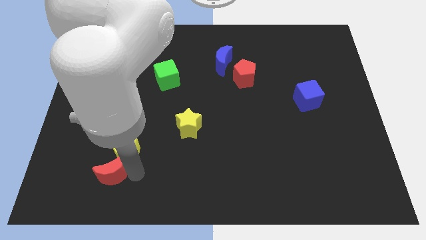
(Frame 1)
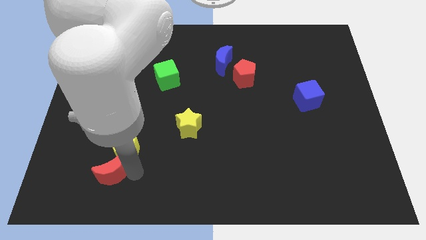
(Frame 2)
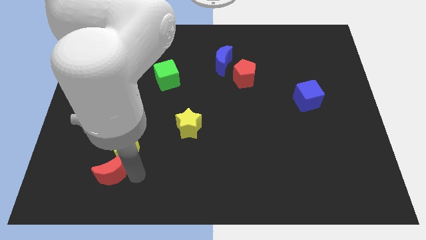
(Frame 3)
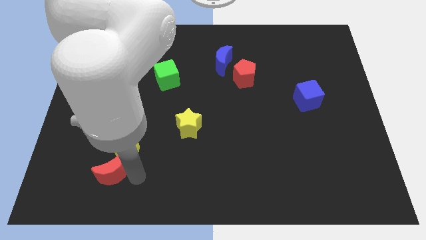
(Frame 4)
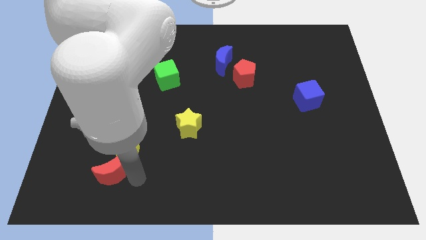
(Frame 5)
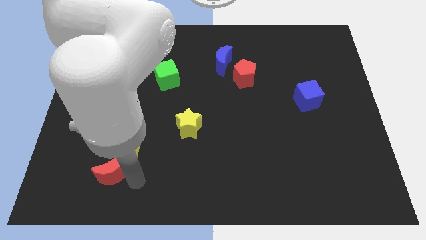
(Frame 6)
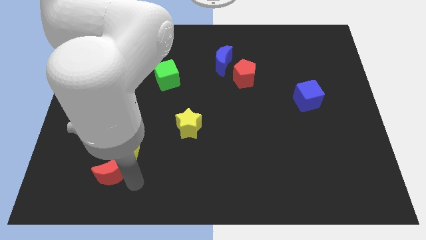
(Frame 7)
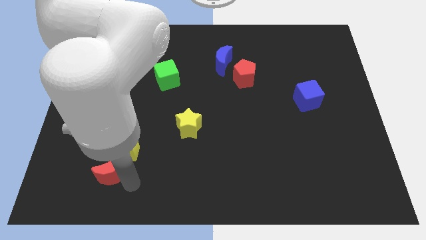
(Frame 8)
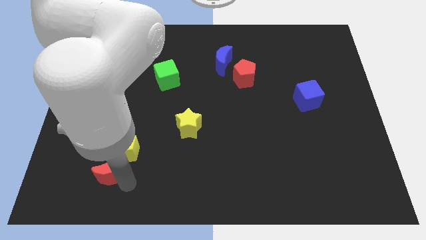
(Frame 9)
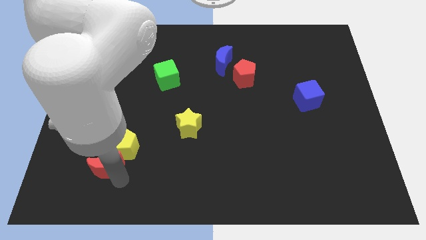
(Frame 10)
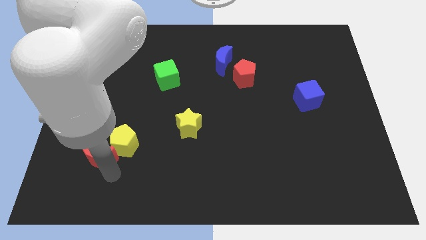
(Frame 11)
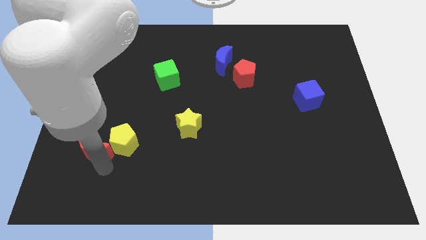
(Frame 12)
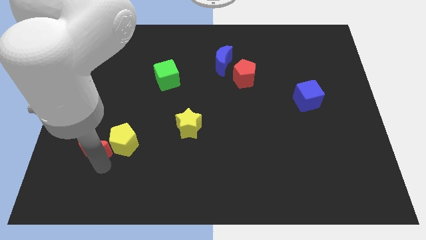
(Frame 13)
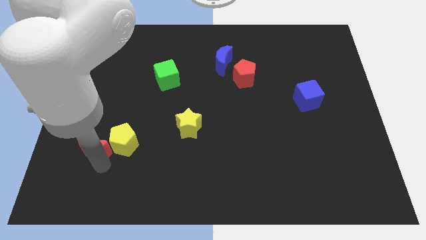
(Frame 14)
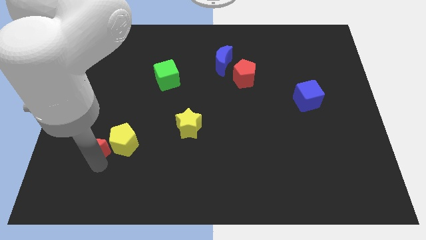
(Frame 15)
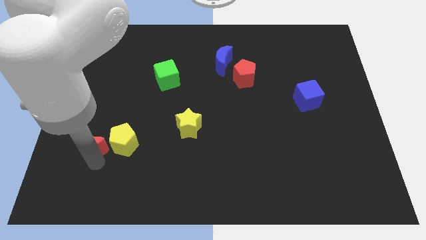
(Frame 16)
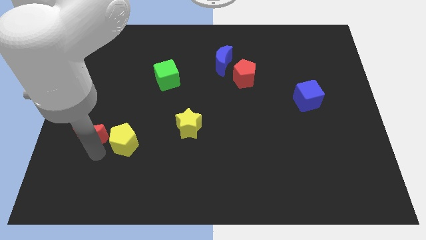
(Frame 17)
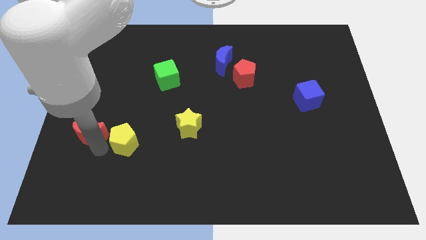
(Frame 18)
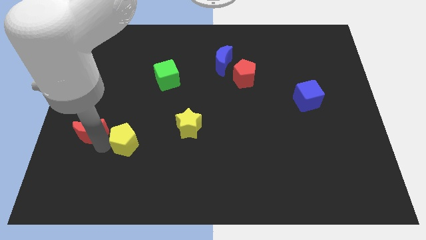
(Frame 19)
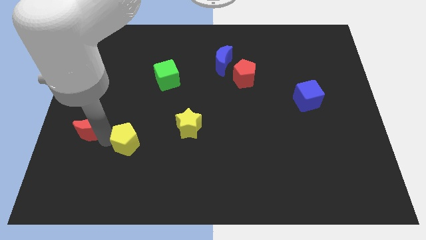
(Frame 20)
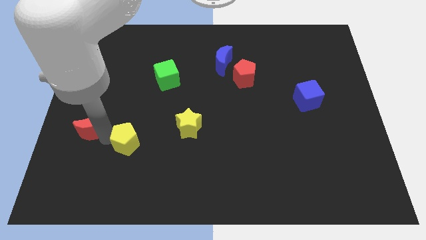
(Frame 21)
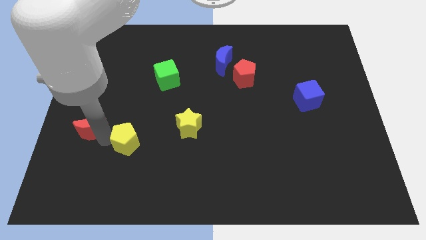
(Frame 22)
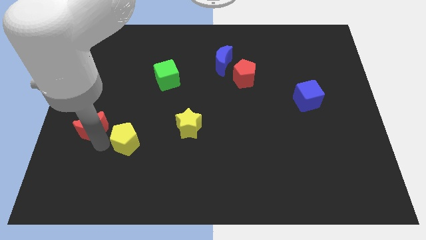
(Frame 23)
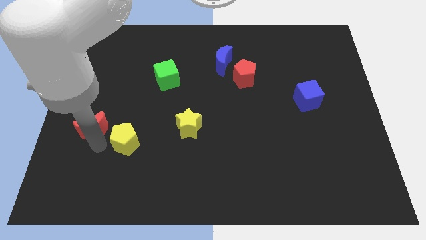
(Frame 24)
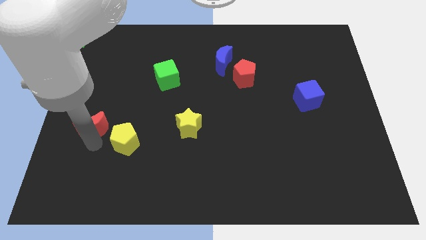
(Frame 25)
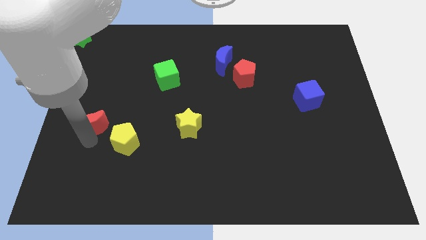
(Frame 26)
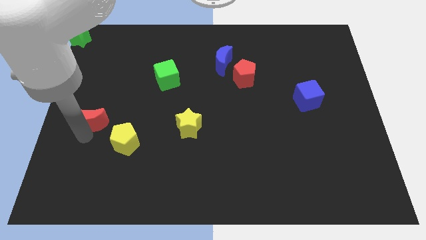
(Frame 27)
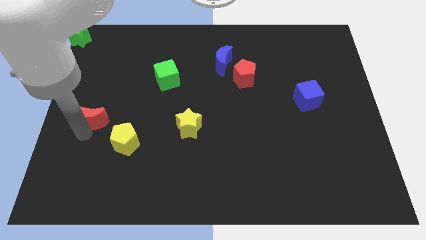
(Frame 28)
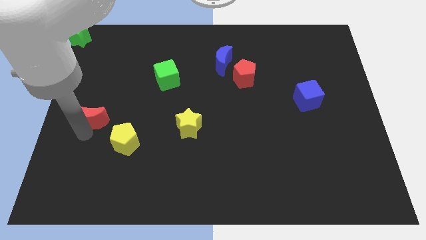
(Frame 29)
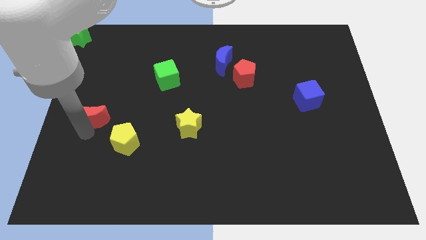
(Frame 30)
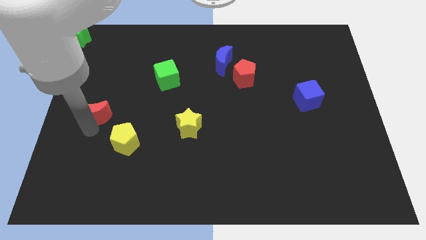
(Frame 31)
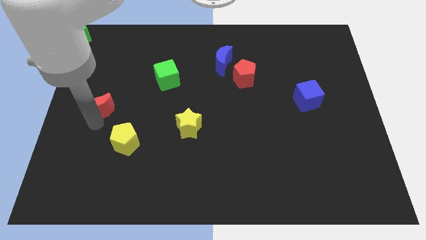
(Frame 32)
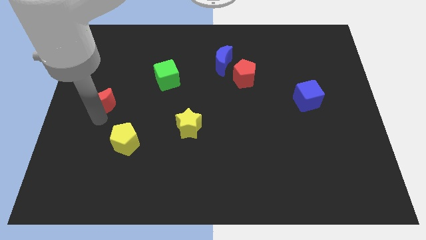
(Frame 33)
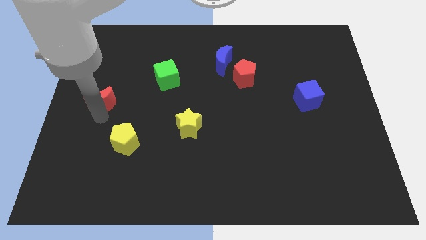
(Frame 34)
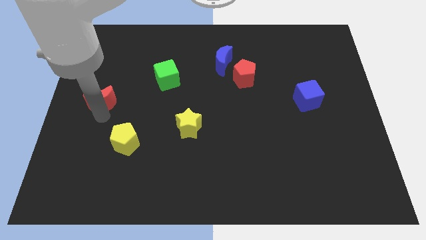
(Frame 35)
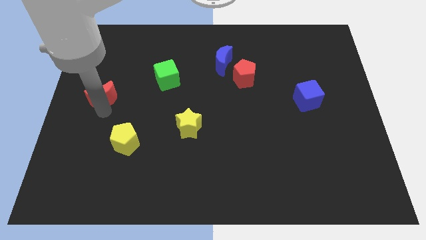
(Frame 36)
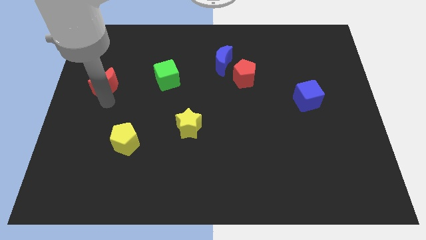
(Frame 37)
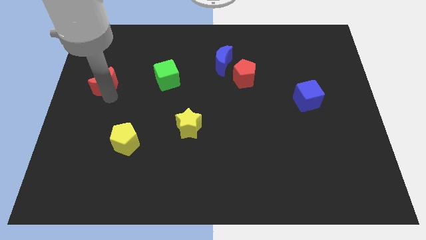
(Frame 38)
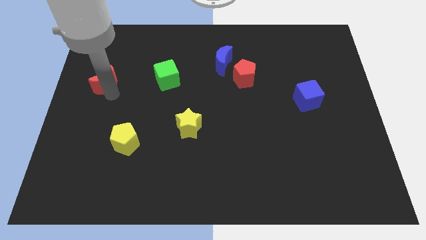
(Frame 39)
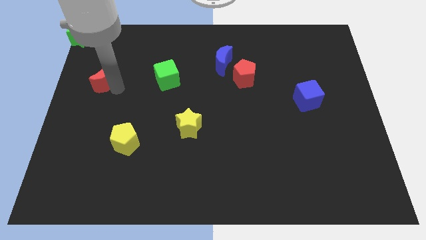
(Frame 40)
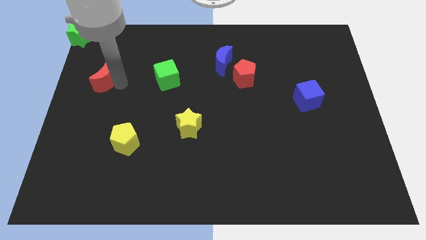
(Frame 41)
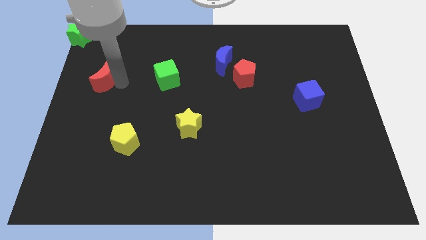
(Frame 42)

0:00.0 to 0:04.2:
move red moon to the left of green cube

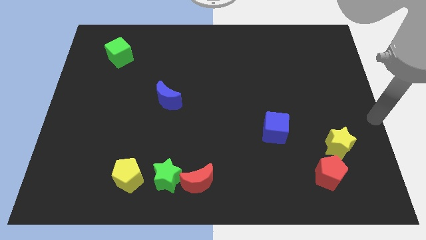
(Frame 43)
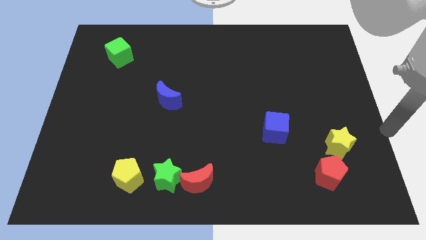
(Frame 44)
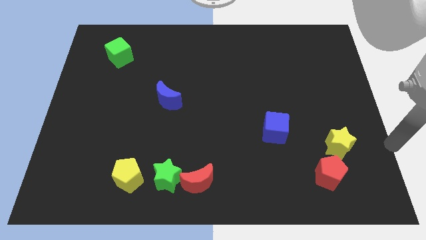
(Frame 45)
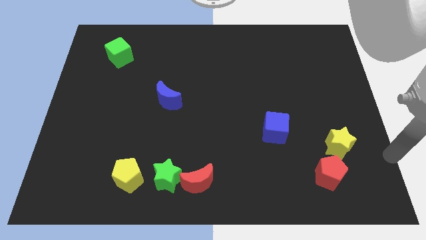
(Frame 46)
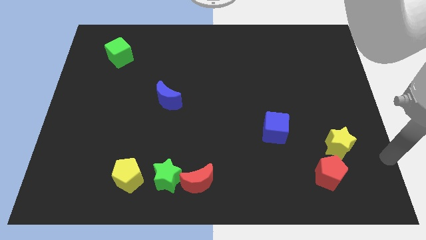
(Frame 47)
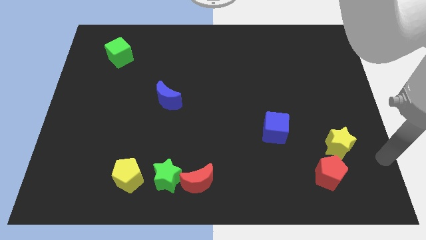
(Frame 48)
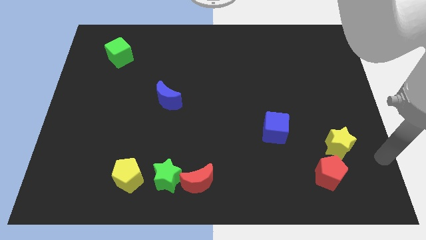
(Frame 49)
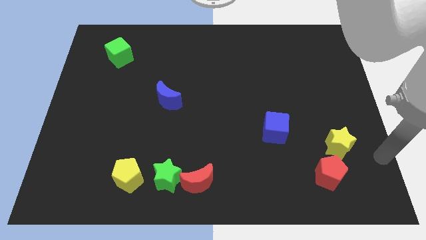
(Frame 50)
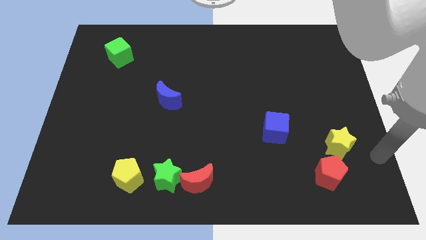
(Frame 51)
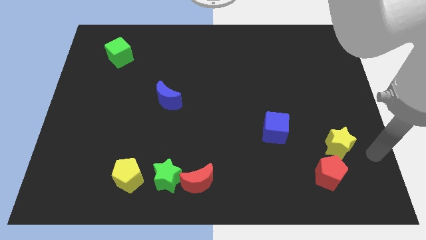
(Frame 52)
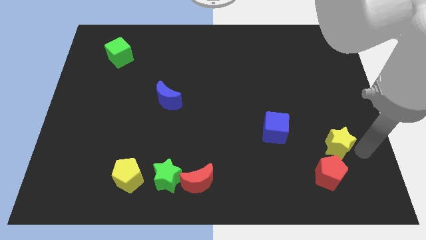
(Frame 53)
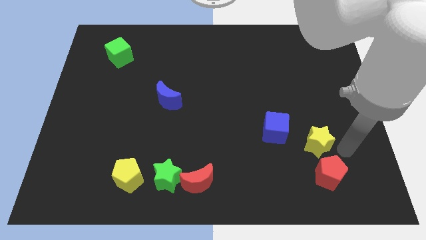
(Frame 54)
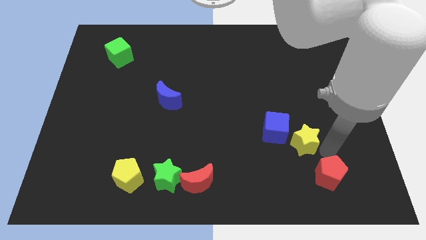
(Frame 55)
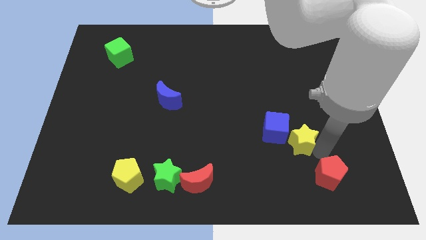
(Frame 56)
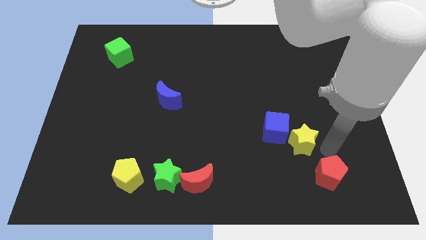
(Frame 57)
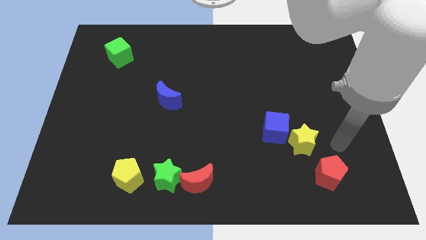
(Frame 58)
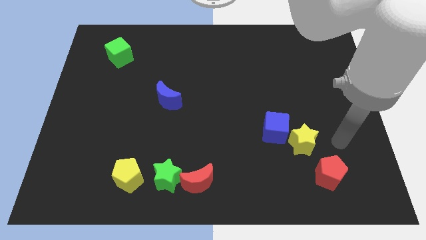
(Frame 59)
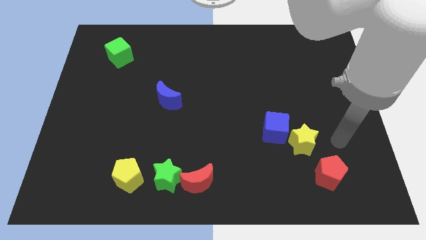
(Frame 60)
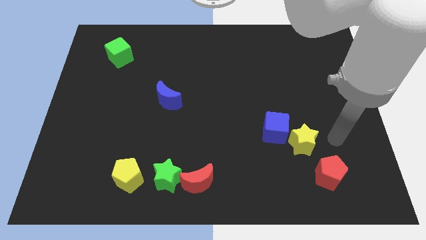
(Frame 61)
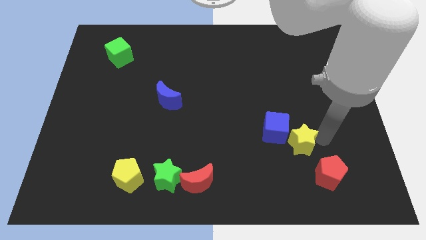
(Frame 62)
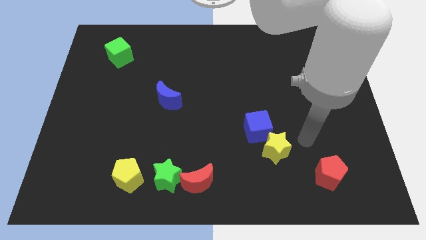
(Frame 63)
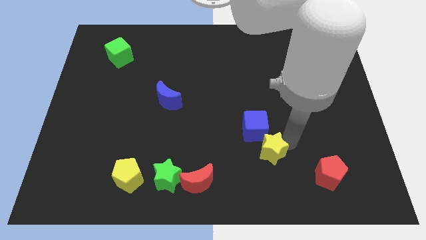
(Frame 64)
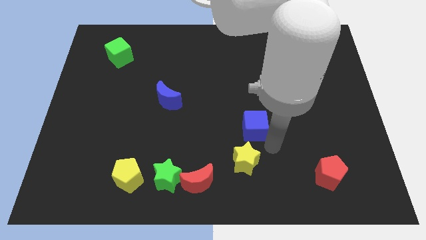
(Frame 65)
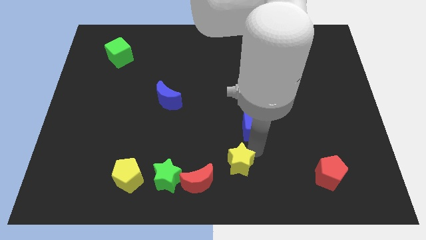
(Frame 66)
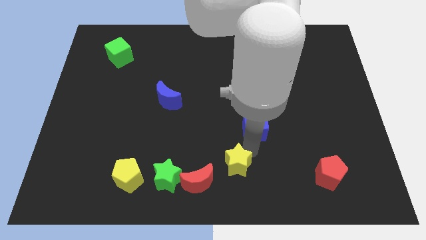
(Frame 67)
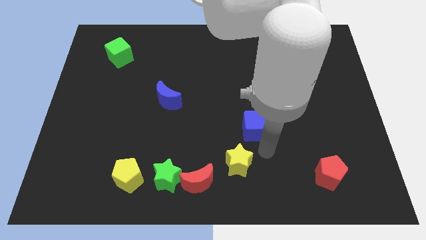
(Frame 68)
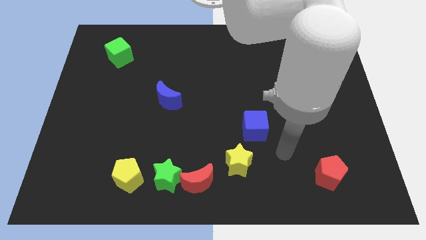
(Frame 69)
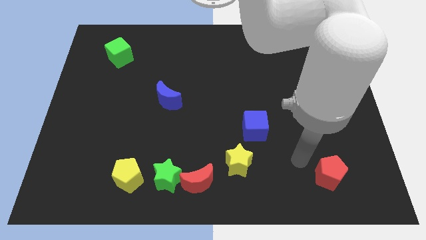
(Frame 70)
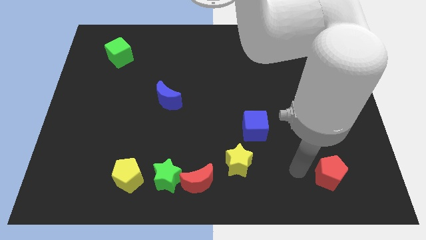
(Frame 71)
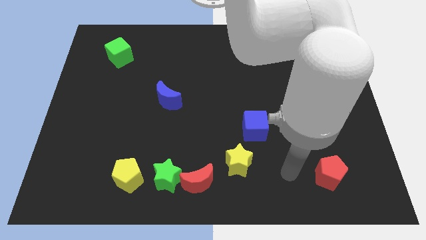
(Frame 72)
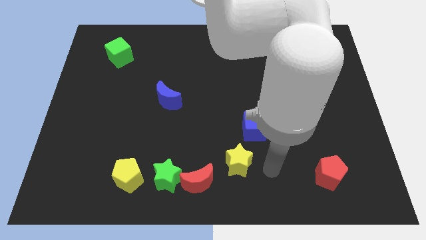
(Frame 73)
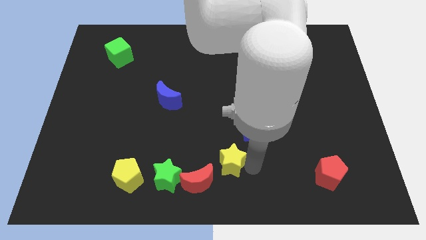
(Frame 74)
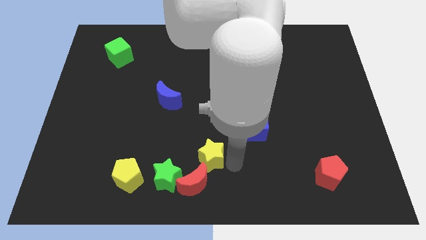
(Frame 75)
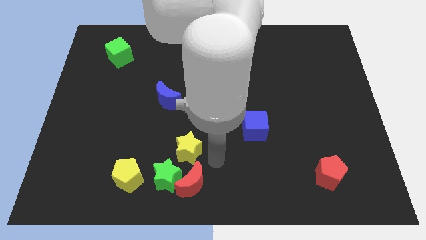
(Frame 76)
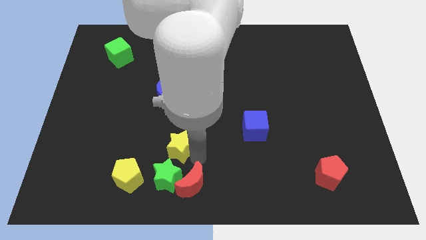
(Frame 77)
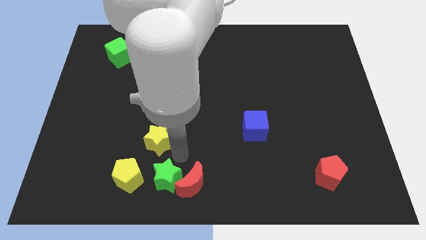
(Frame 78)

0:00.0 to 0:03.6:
place the yellow star above the green star

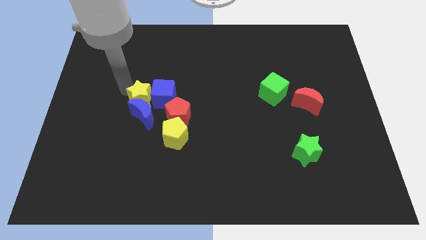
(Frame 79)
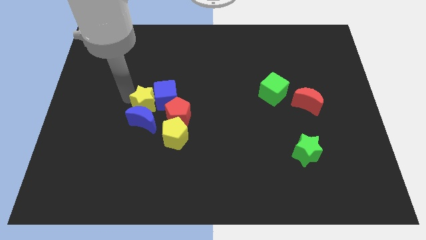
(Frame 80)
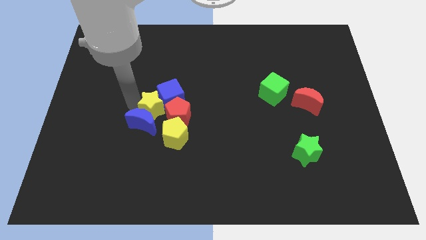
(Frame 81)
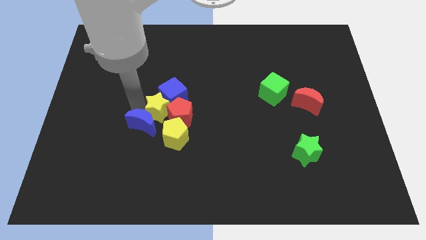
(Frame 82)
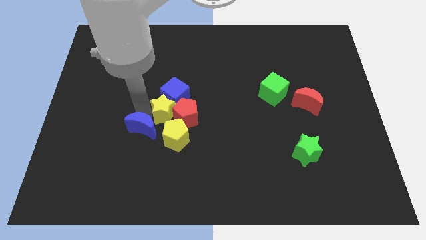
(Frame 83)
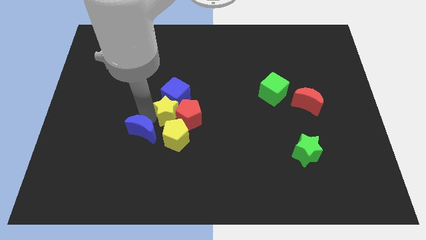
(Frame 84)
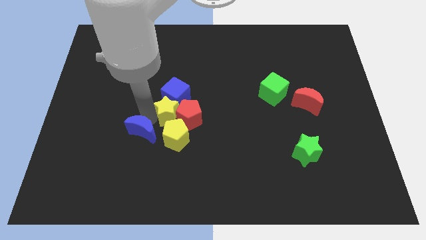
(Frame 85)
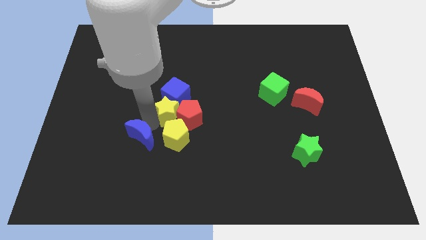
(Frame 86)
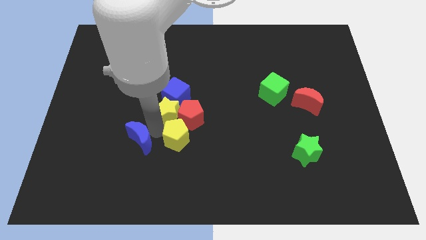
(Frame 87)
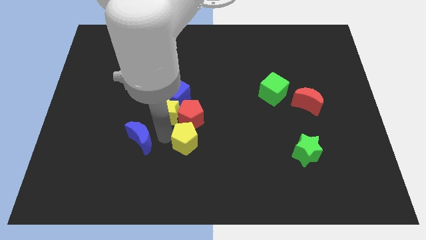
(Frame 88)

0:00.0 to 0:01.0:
separate the blue moon and yellow star

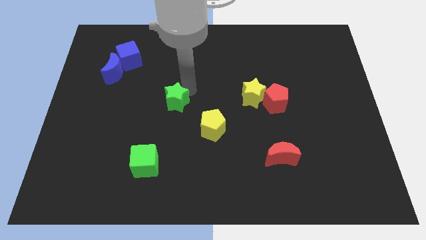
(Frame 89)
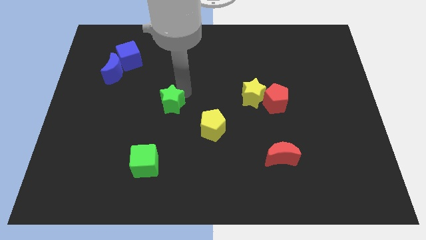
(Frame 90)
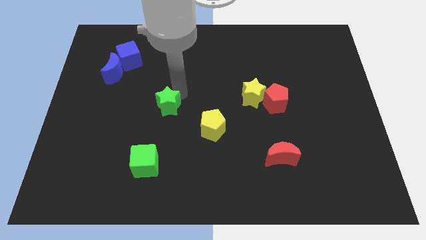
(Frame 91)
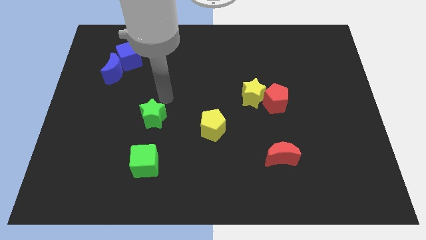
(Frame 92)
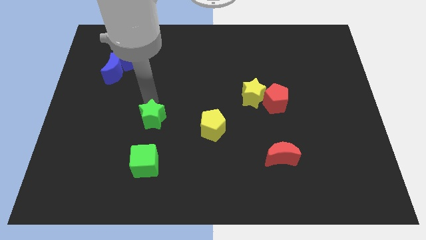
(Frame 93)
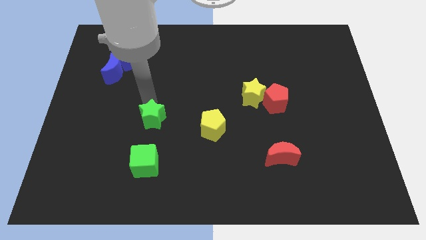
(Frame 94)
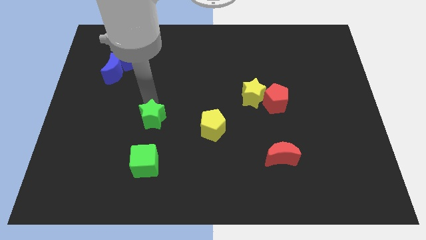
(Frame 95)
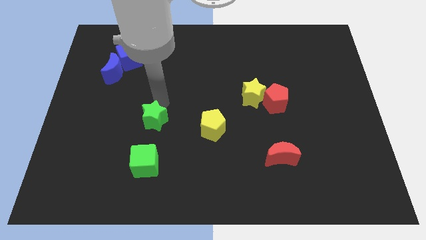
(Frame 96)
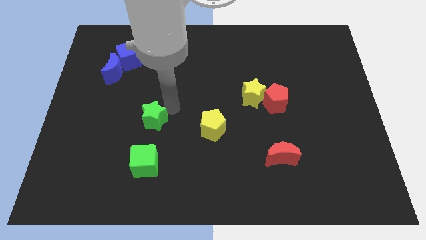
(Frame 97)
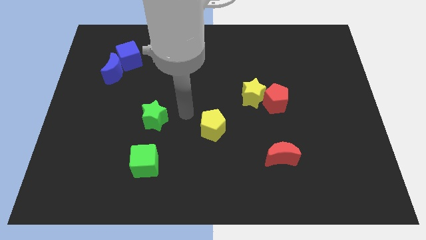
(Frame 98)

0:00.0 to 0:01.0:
place the green star above the green cube
